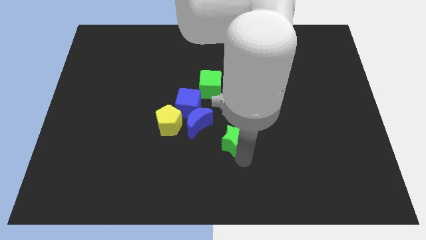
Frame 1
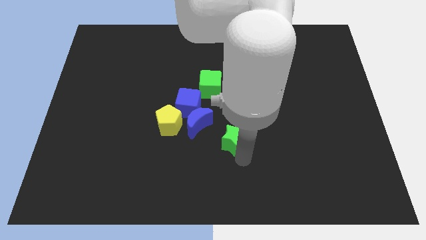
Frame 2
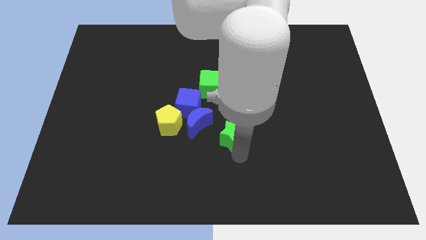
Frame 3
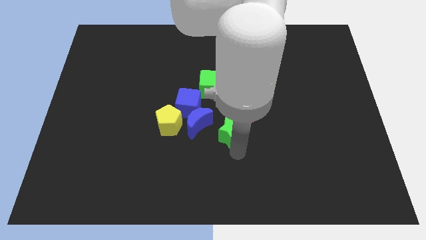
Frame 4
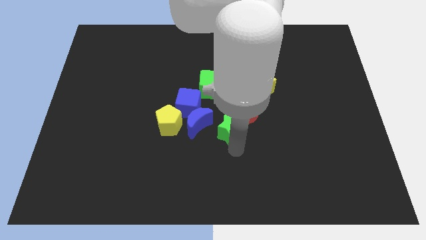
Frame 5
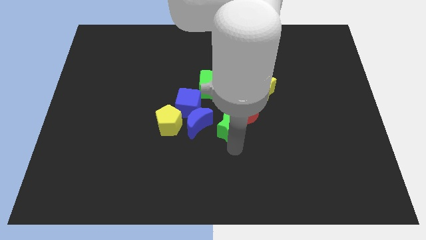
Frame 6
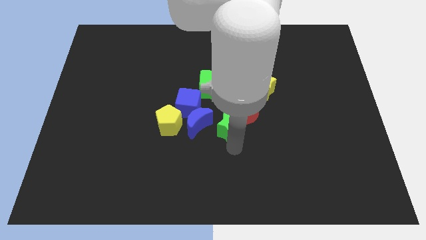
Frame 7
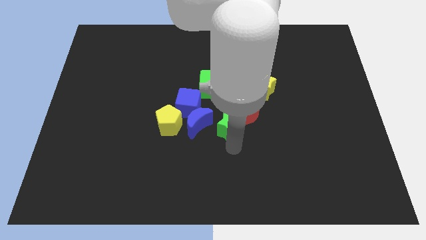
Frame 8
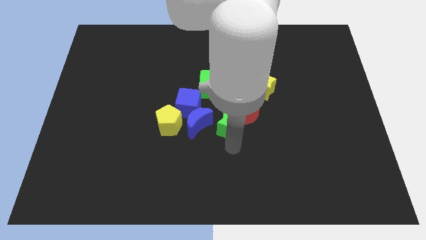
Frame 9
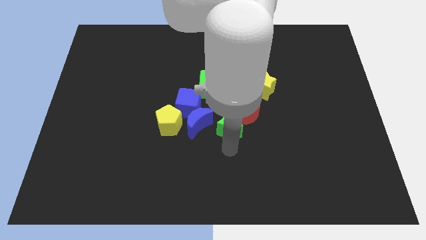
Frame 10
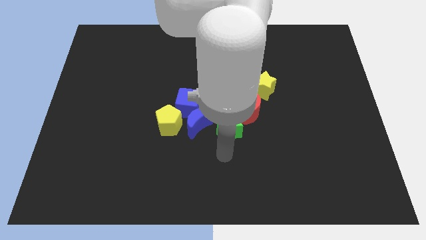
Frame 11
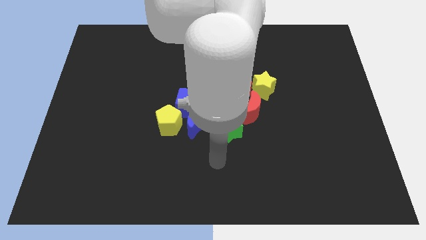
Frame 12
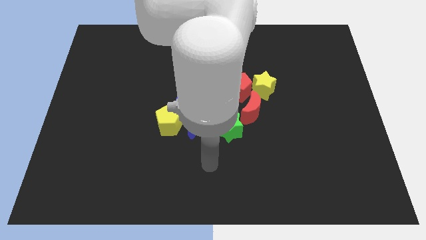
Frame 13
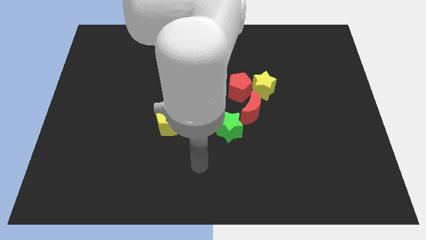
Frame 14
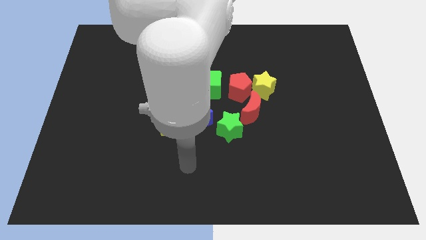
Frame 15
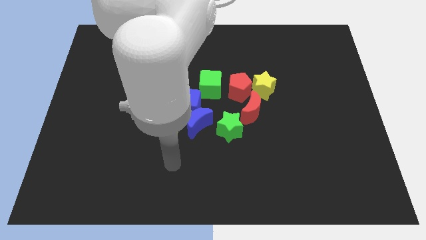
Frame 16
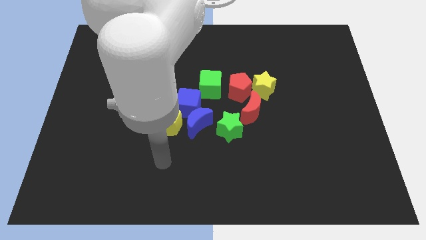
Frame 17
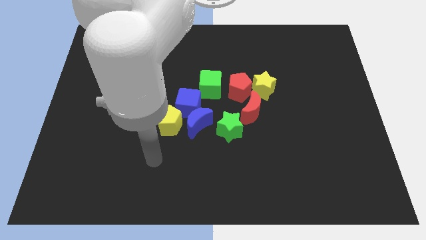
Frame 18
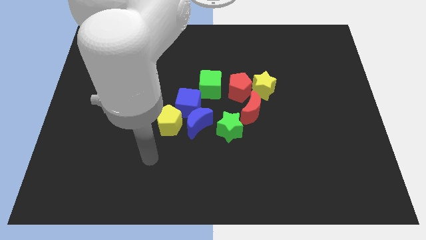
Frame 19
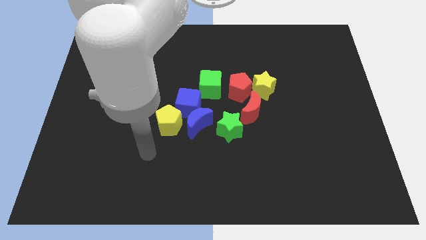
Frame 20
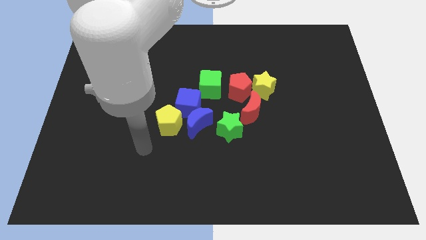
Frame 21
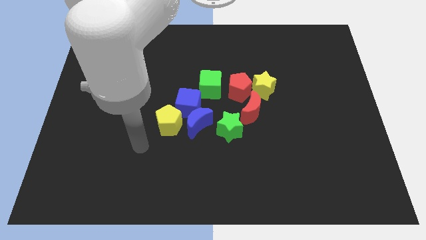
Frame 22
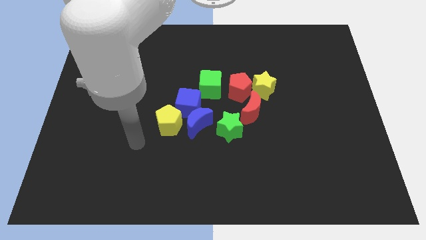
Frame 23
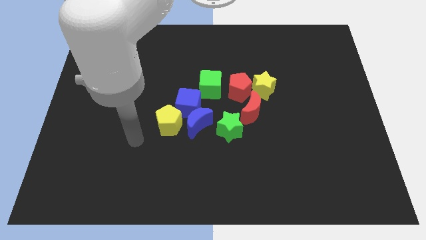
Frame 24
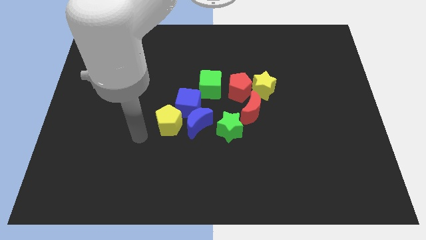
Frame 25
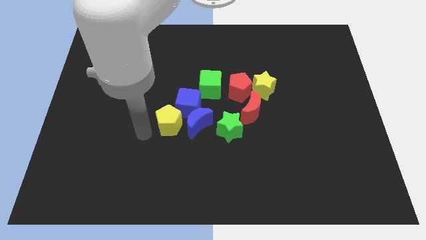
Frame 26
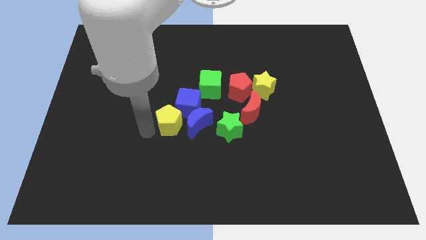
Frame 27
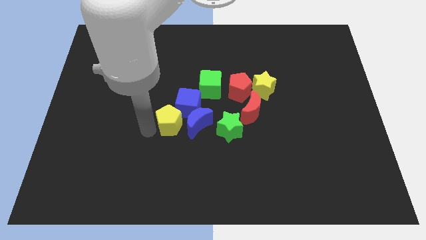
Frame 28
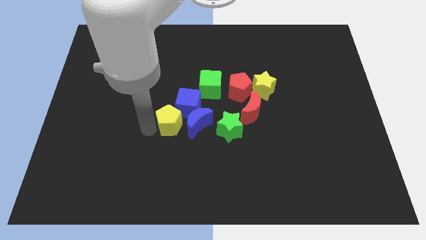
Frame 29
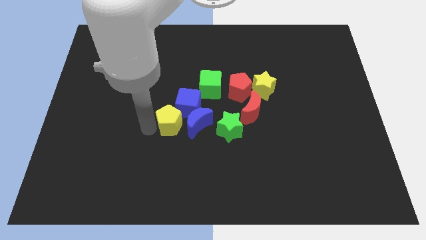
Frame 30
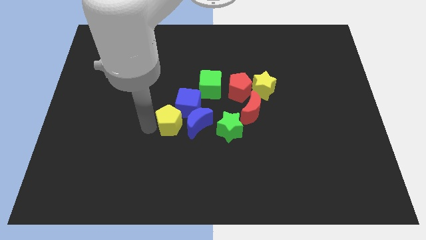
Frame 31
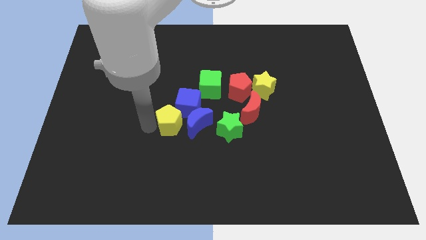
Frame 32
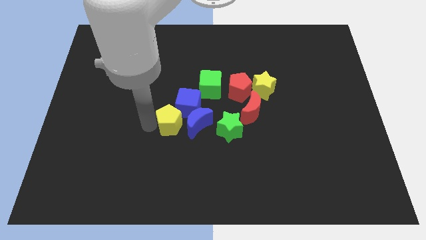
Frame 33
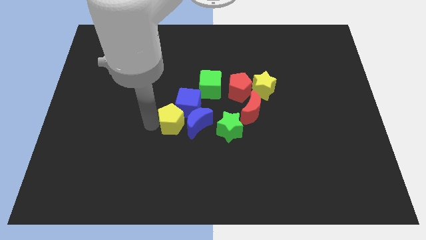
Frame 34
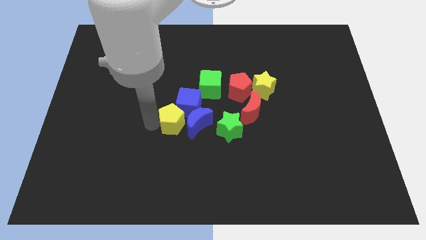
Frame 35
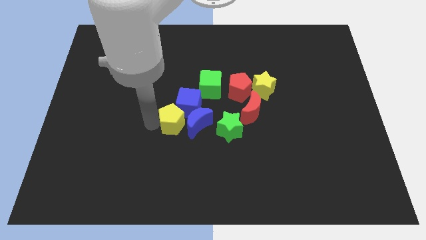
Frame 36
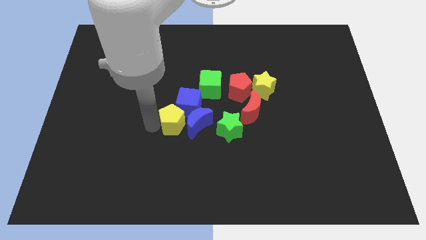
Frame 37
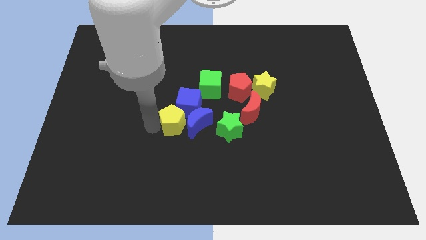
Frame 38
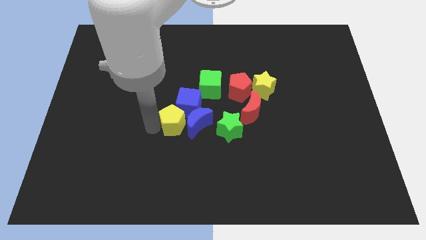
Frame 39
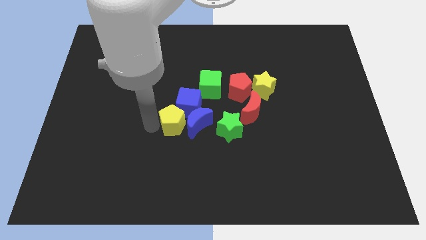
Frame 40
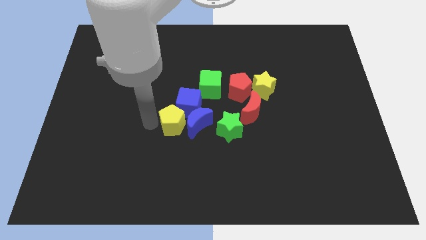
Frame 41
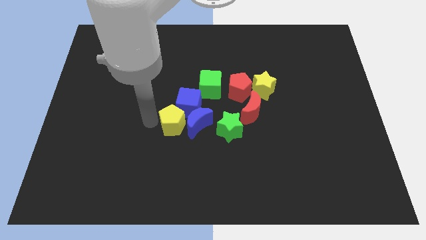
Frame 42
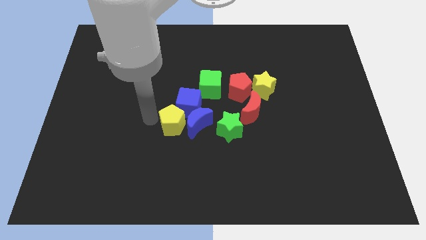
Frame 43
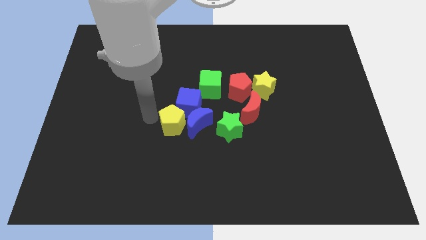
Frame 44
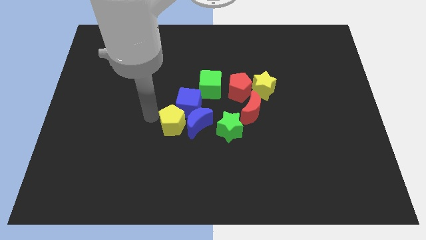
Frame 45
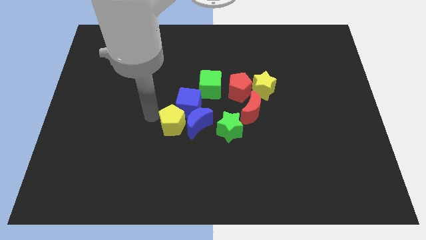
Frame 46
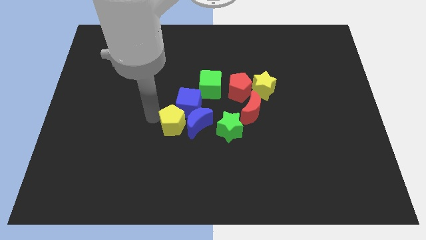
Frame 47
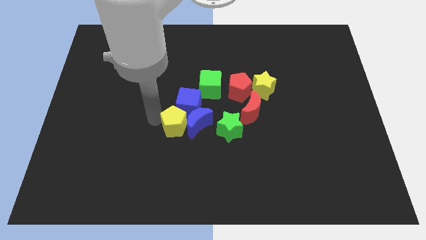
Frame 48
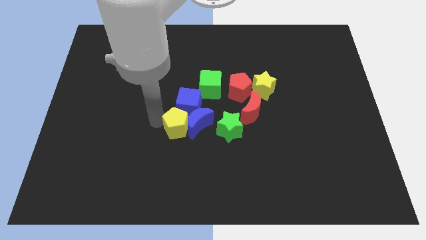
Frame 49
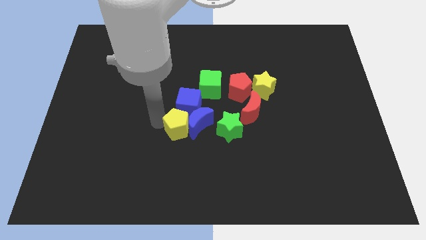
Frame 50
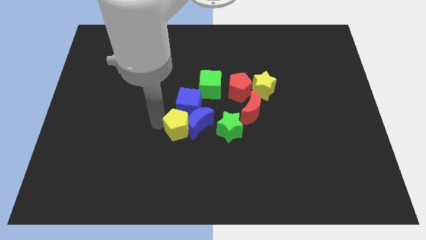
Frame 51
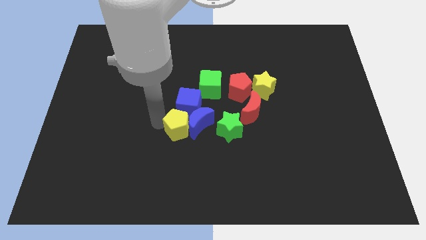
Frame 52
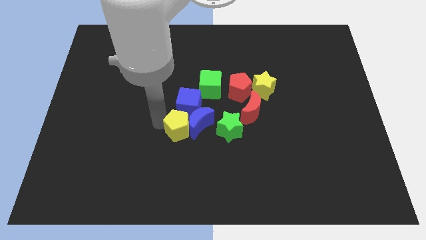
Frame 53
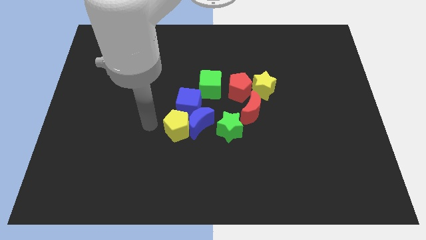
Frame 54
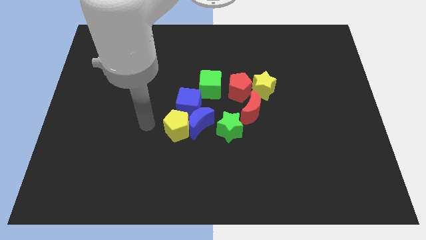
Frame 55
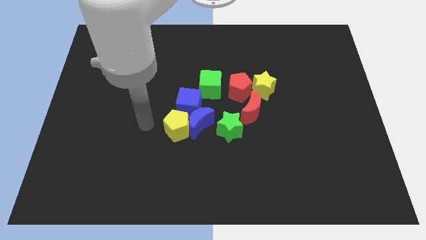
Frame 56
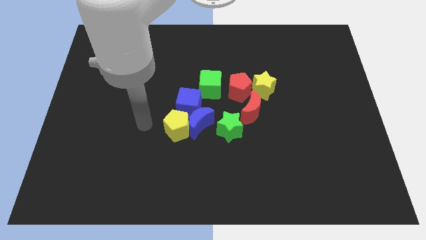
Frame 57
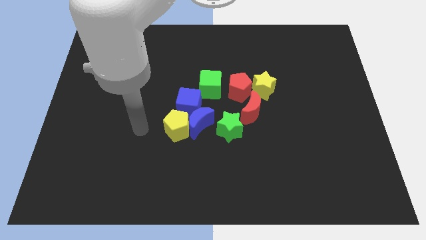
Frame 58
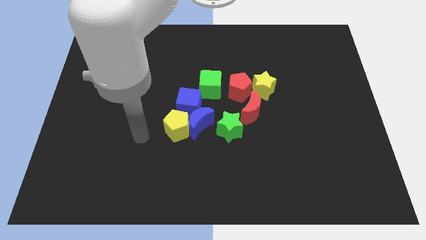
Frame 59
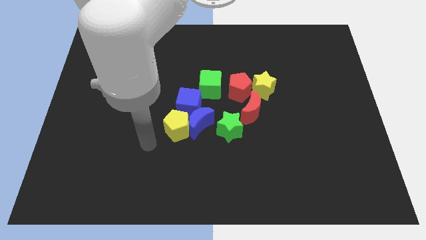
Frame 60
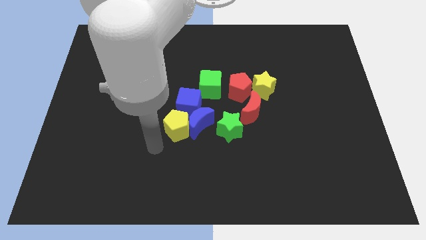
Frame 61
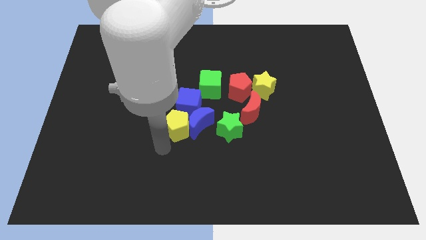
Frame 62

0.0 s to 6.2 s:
adjust the yellow pentagon to the left of the blue blocks

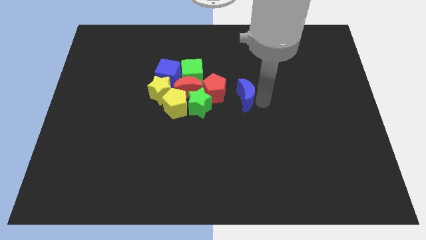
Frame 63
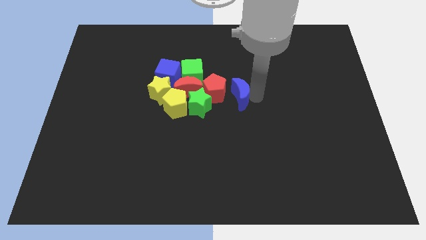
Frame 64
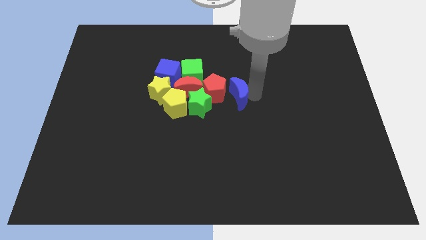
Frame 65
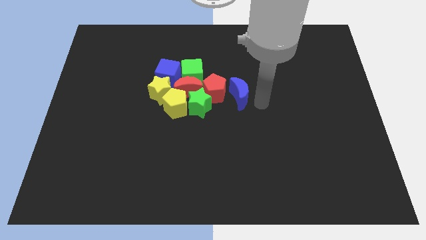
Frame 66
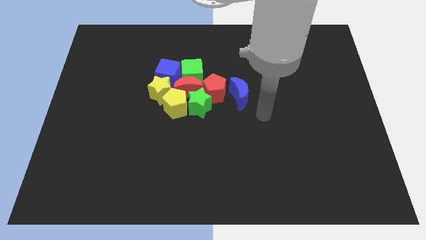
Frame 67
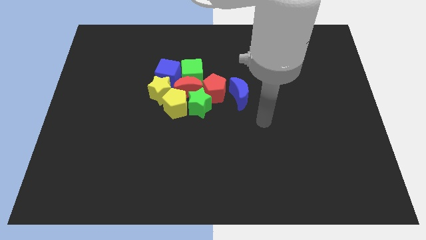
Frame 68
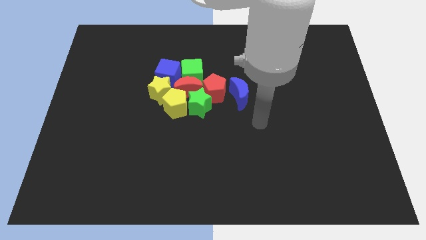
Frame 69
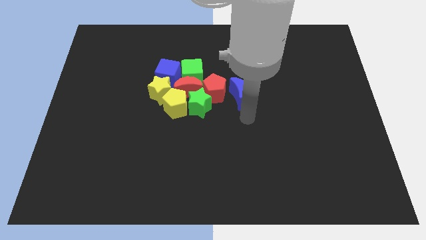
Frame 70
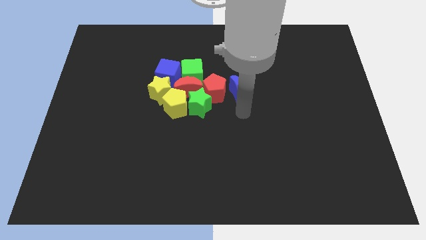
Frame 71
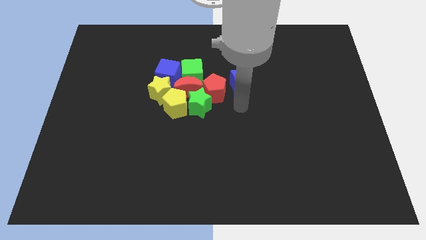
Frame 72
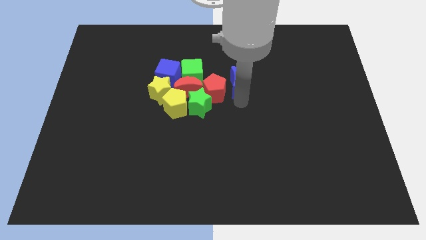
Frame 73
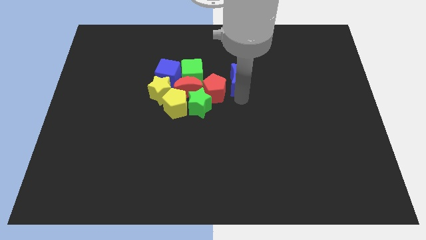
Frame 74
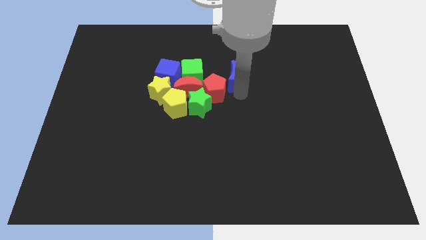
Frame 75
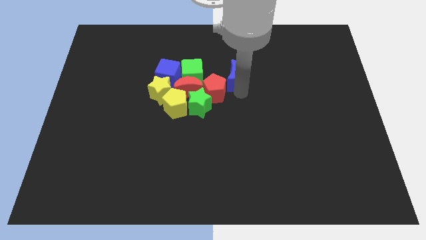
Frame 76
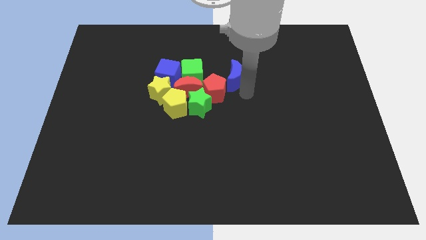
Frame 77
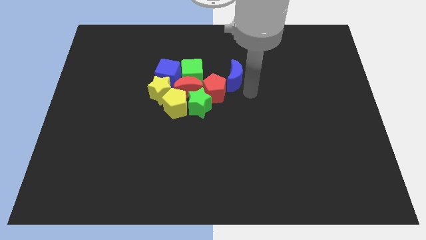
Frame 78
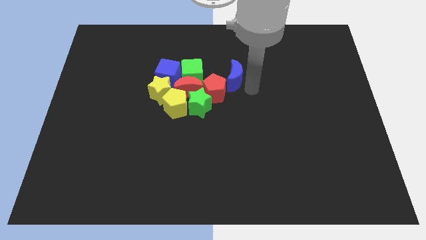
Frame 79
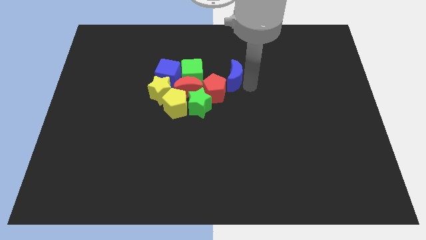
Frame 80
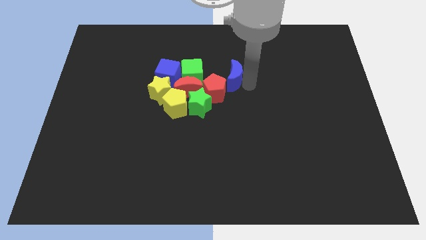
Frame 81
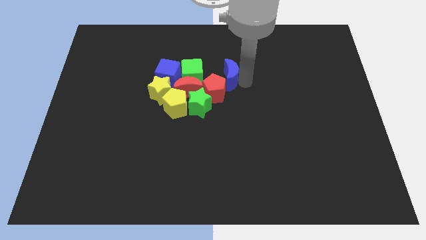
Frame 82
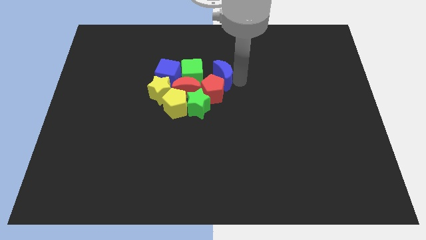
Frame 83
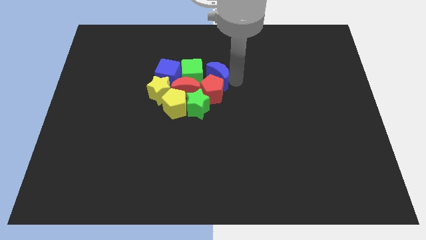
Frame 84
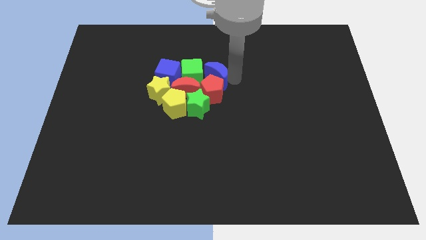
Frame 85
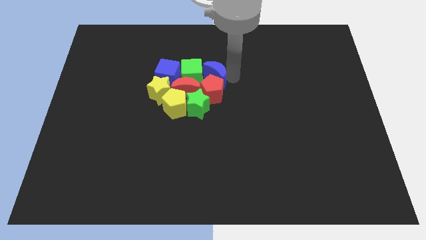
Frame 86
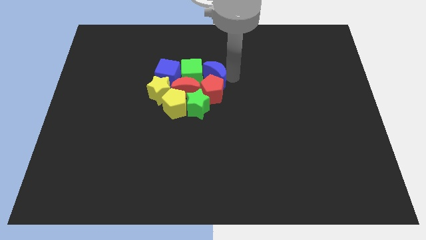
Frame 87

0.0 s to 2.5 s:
push the blue crescent right to the green cube

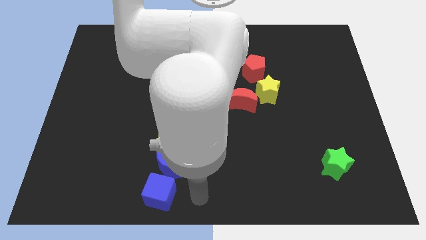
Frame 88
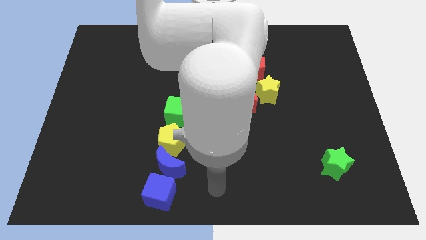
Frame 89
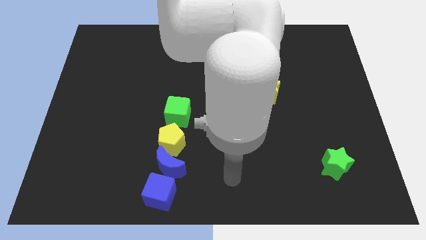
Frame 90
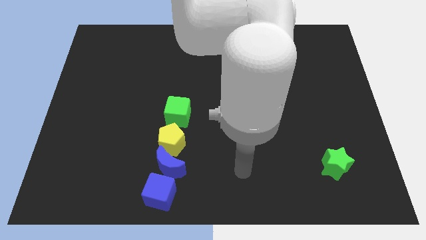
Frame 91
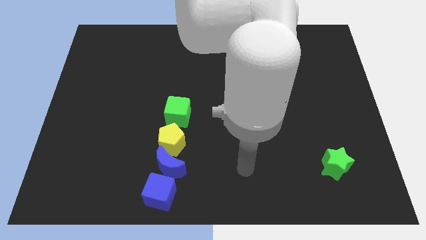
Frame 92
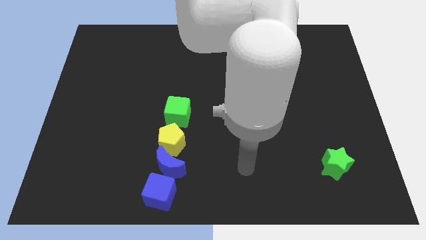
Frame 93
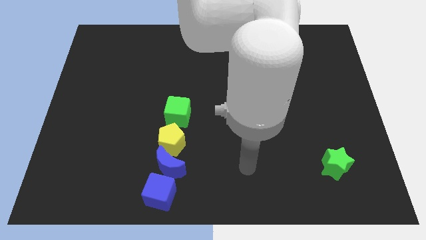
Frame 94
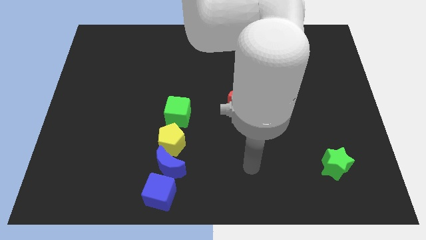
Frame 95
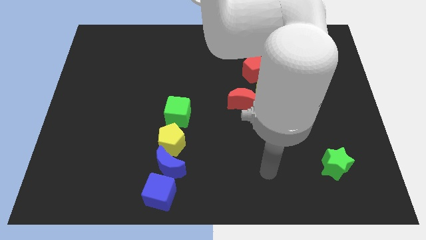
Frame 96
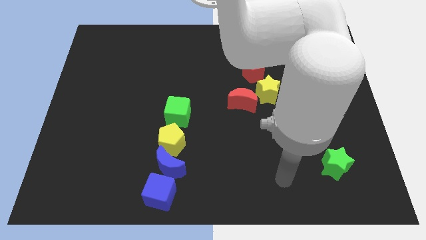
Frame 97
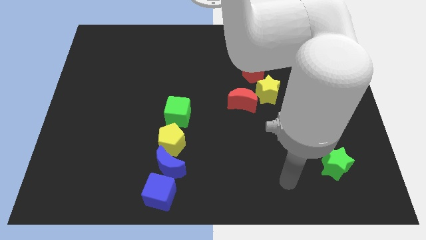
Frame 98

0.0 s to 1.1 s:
move your arm away from the blue cube
